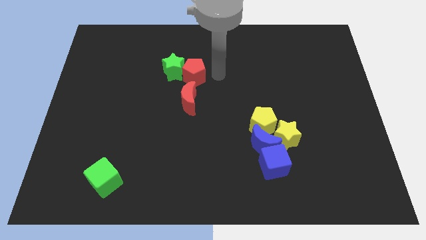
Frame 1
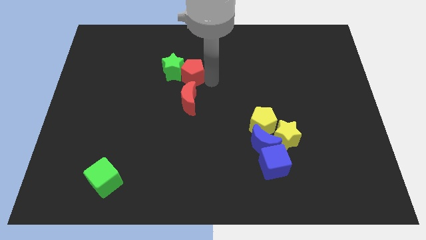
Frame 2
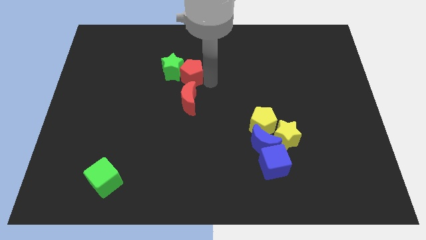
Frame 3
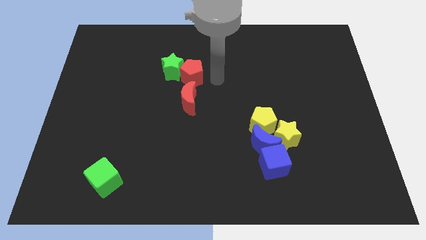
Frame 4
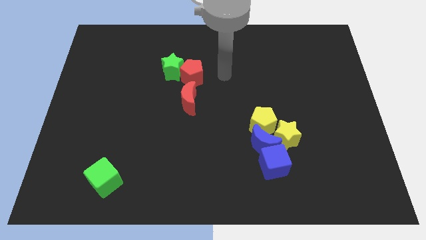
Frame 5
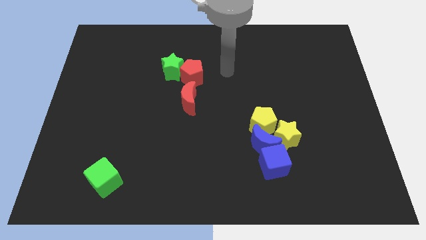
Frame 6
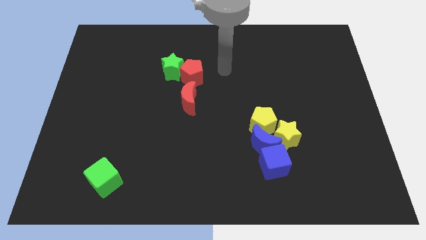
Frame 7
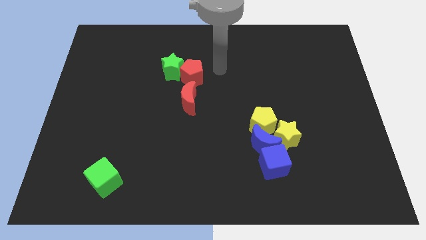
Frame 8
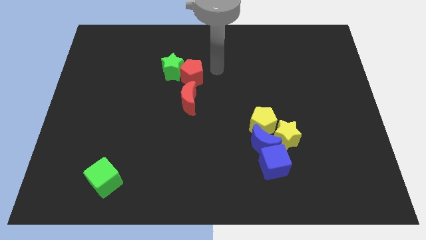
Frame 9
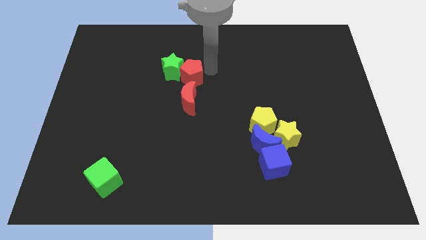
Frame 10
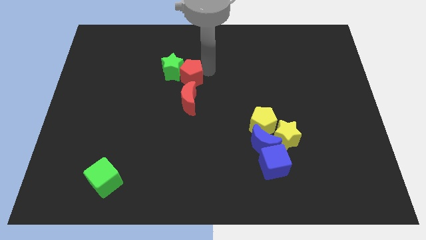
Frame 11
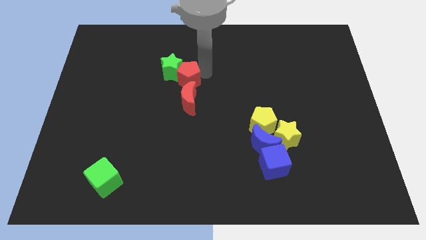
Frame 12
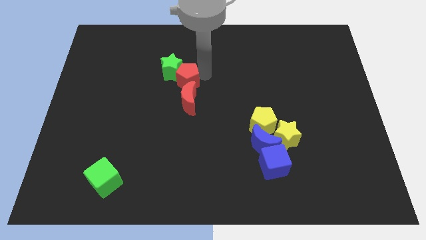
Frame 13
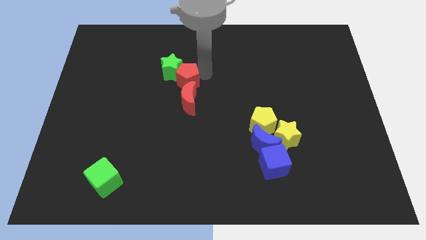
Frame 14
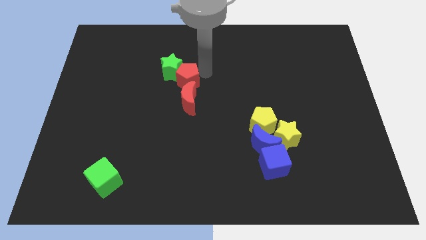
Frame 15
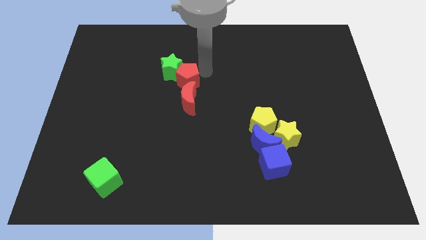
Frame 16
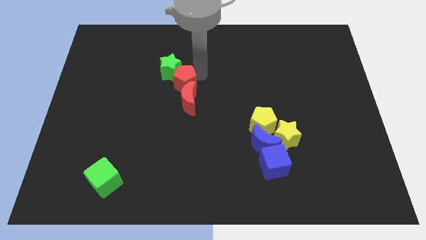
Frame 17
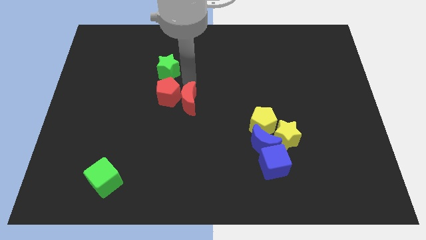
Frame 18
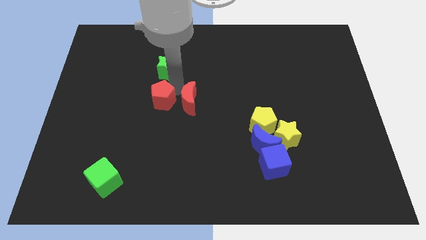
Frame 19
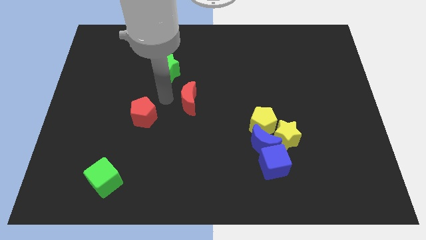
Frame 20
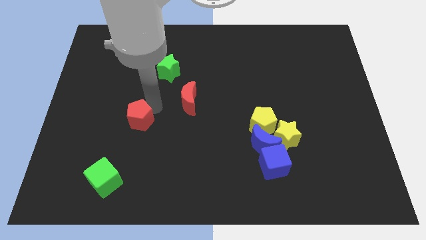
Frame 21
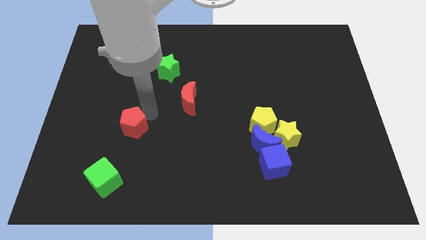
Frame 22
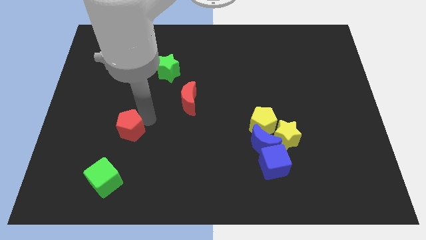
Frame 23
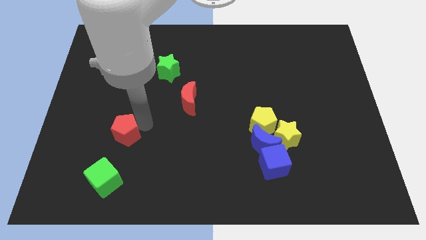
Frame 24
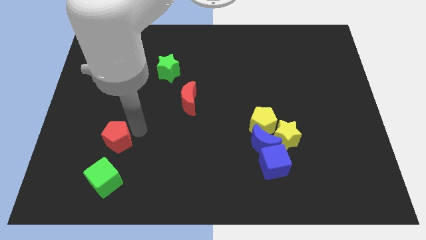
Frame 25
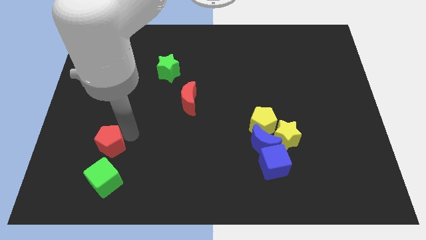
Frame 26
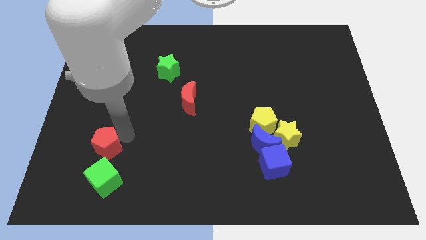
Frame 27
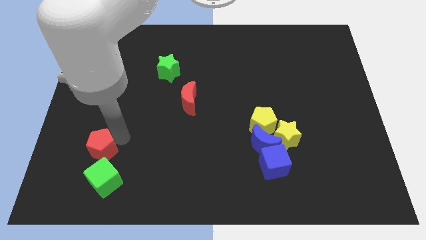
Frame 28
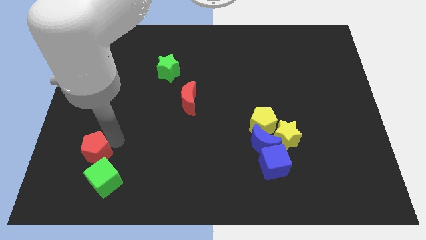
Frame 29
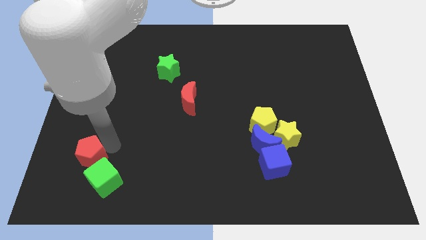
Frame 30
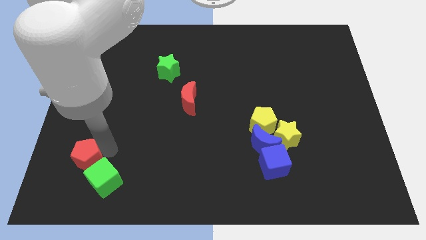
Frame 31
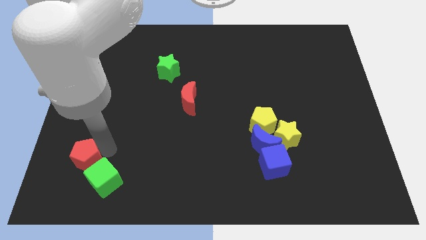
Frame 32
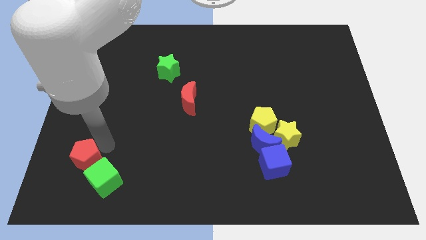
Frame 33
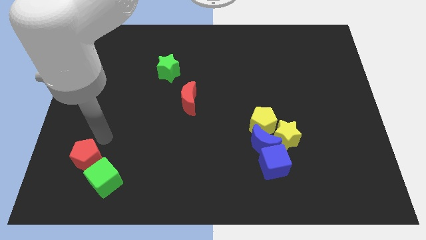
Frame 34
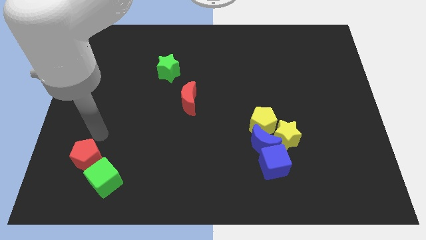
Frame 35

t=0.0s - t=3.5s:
move the red pentagon diagonally above the green cube

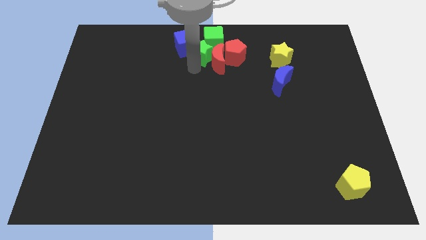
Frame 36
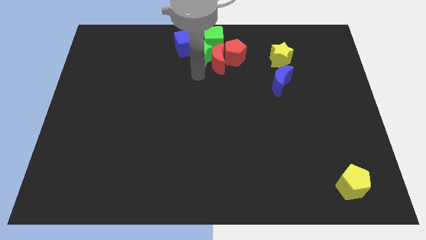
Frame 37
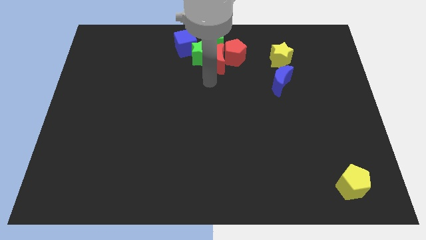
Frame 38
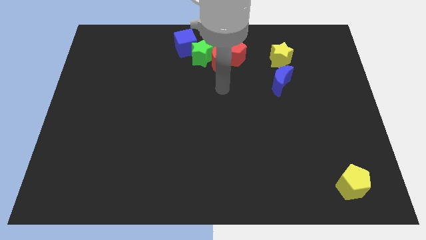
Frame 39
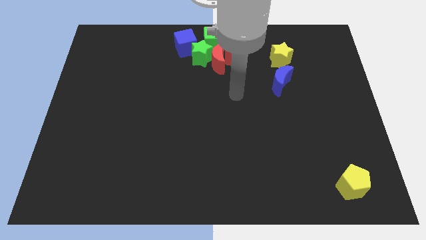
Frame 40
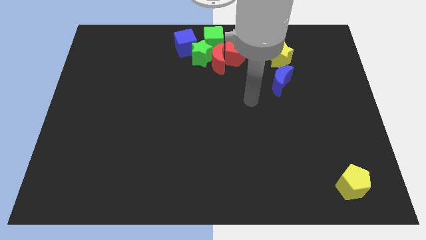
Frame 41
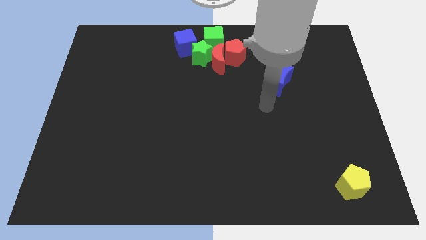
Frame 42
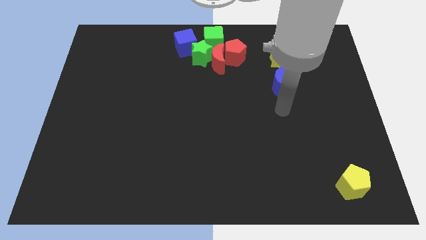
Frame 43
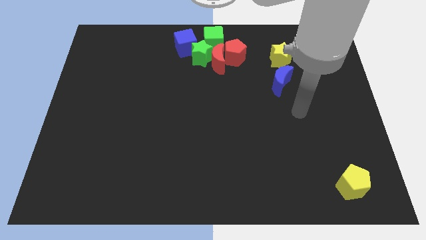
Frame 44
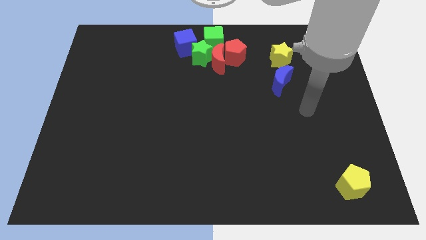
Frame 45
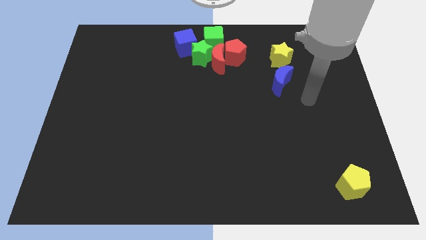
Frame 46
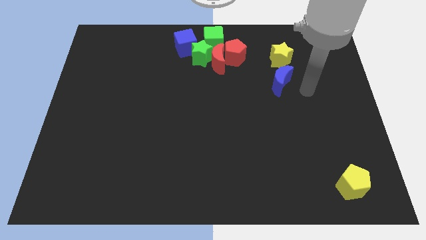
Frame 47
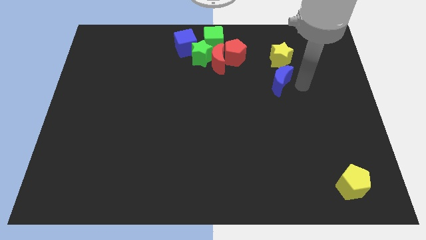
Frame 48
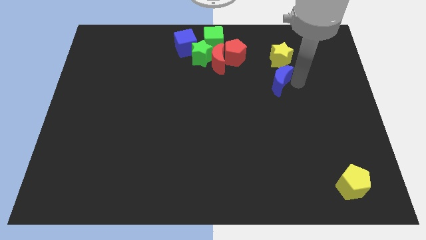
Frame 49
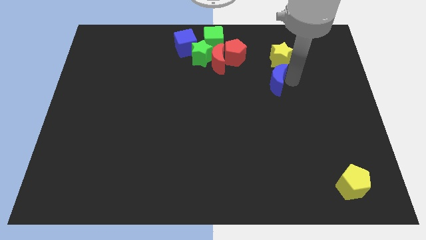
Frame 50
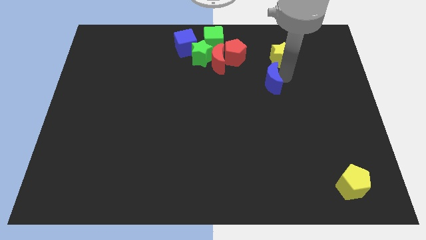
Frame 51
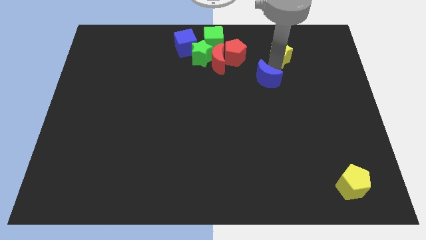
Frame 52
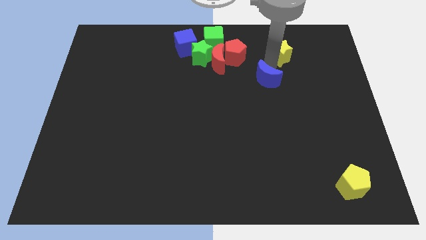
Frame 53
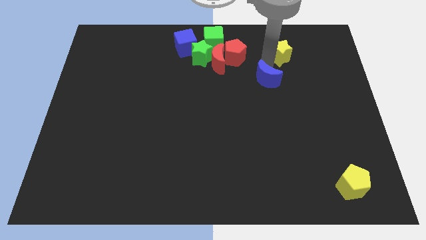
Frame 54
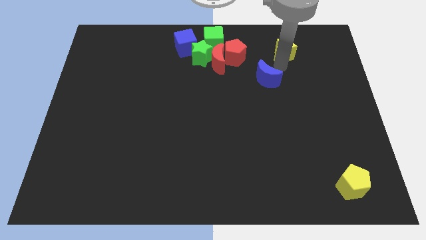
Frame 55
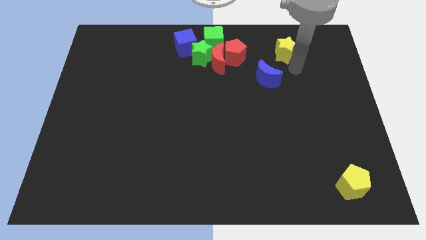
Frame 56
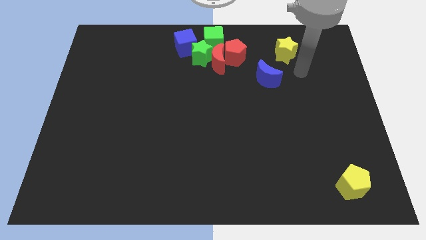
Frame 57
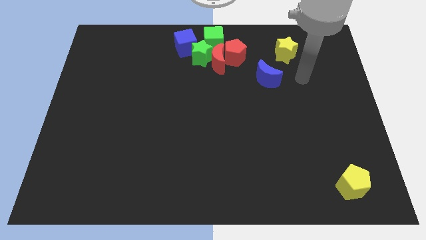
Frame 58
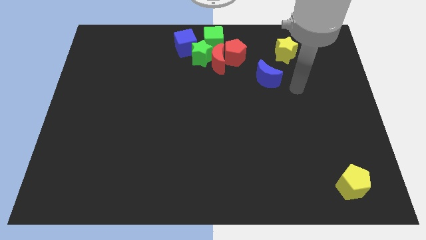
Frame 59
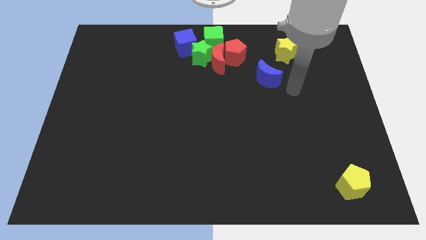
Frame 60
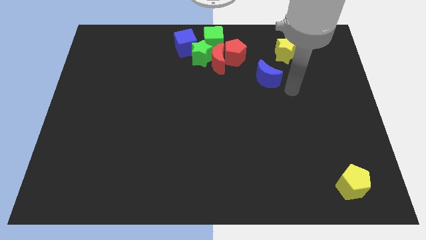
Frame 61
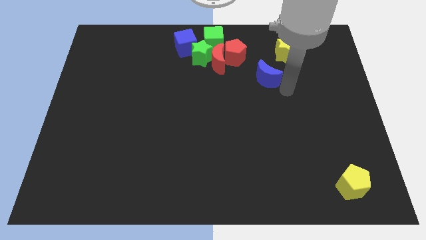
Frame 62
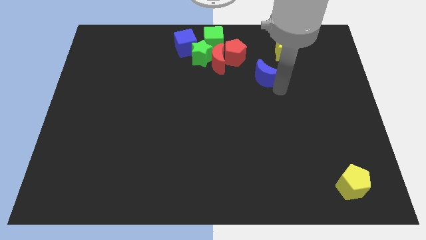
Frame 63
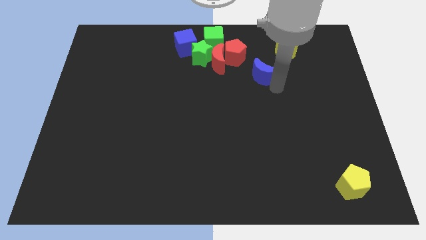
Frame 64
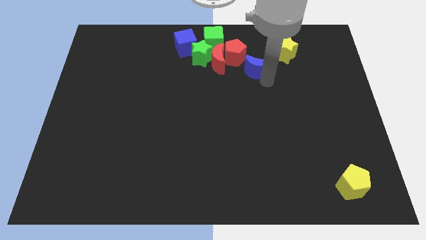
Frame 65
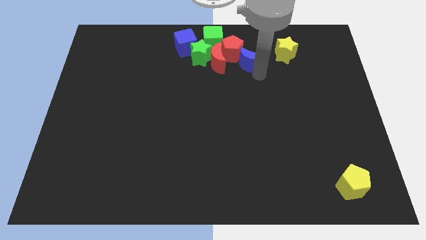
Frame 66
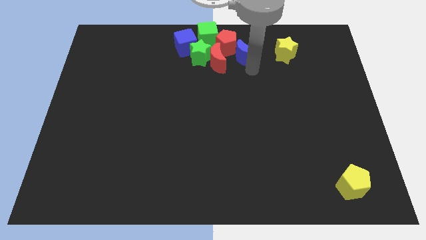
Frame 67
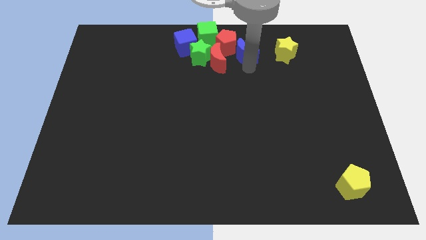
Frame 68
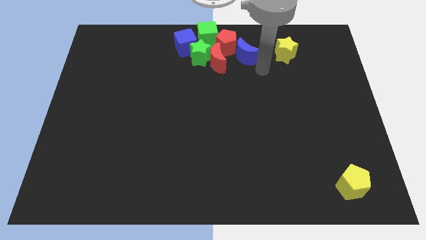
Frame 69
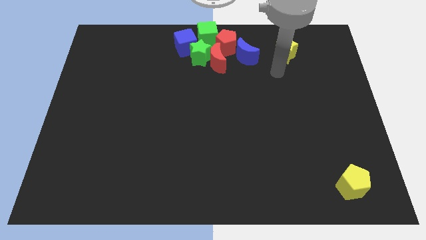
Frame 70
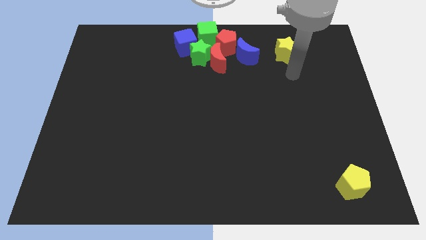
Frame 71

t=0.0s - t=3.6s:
push the blue crescent into the red pentagon

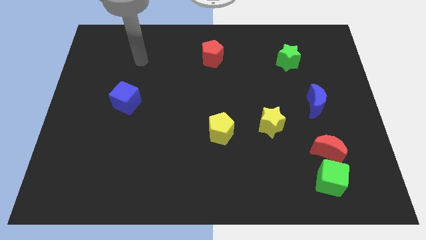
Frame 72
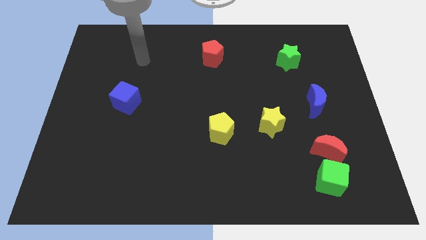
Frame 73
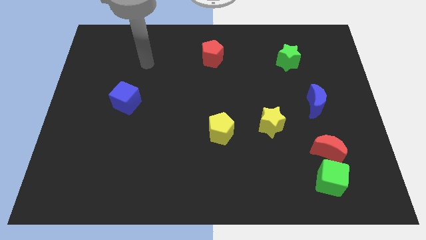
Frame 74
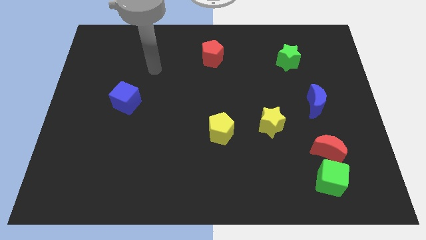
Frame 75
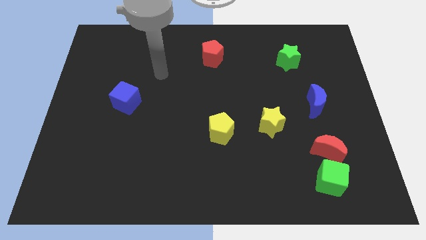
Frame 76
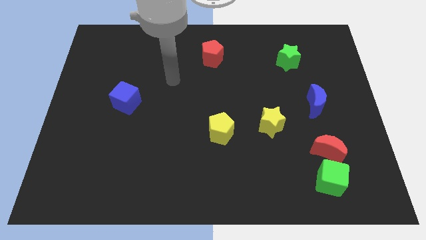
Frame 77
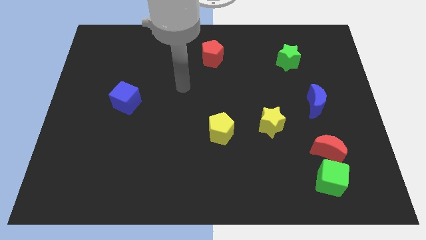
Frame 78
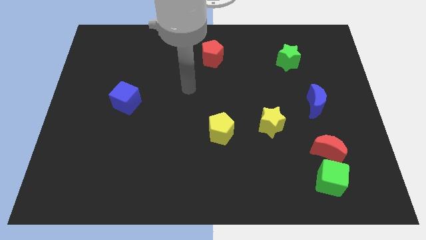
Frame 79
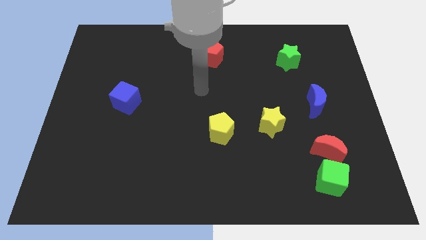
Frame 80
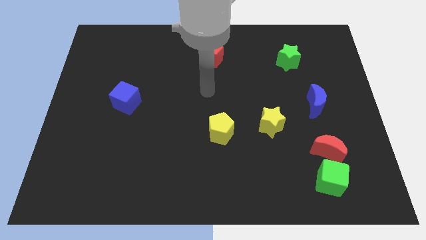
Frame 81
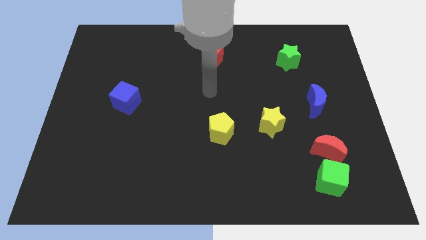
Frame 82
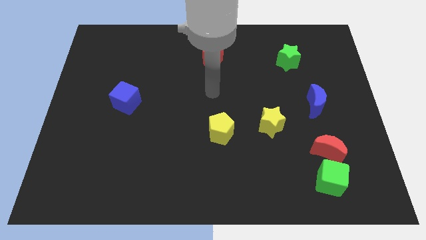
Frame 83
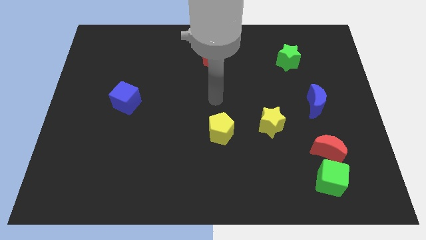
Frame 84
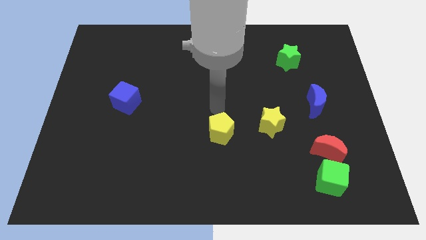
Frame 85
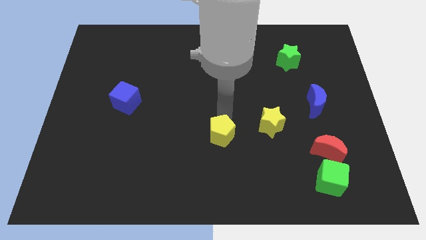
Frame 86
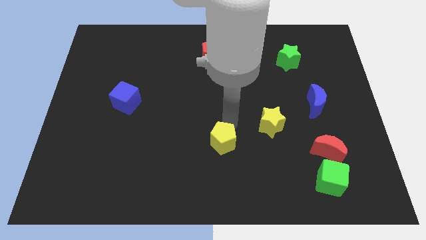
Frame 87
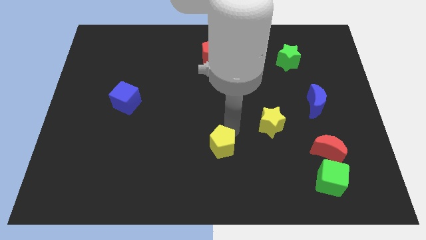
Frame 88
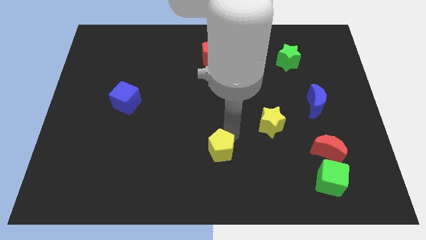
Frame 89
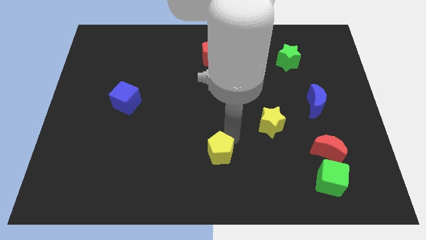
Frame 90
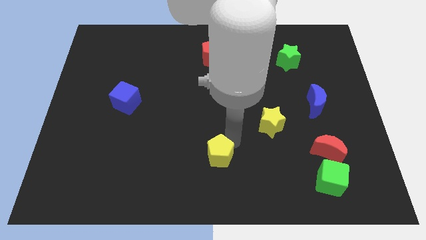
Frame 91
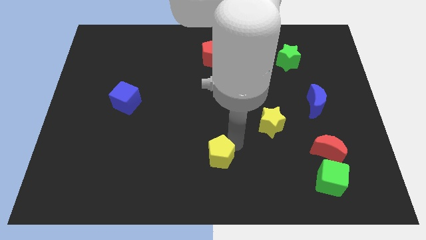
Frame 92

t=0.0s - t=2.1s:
move the yellow pentagon to the bottom center
